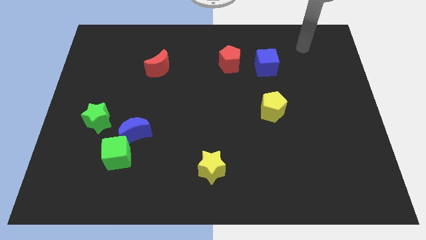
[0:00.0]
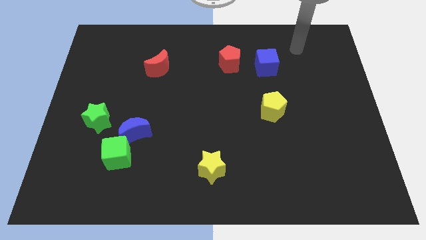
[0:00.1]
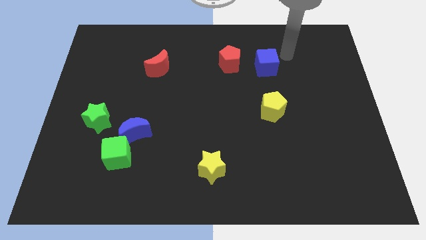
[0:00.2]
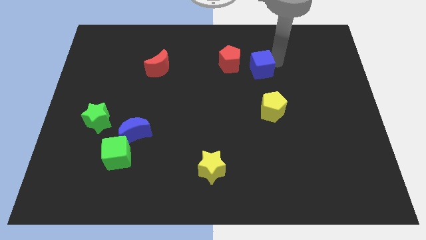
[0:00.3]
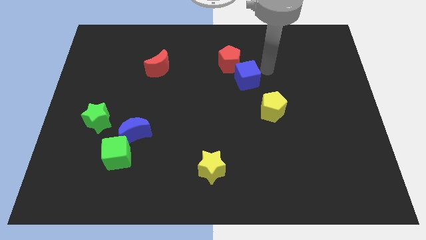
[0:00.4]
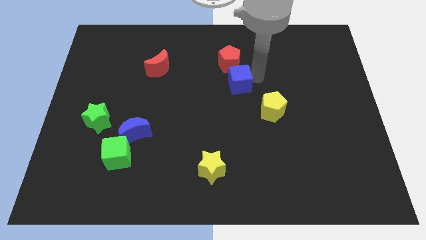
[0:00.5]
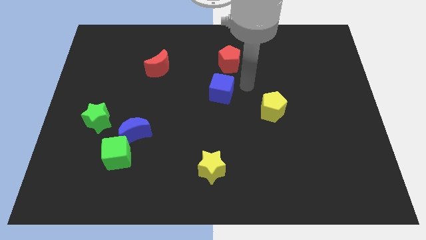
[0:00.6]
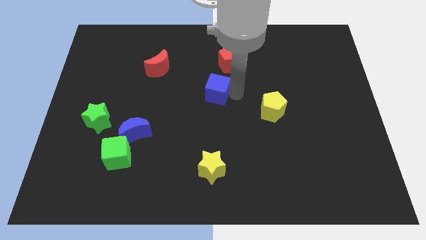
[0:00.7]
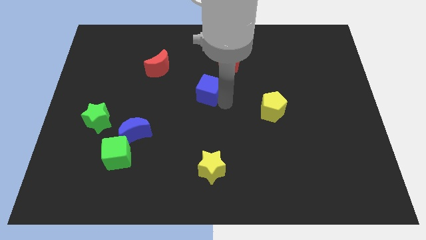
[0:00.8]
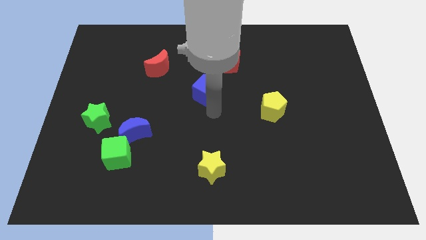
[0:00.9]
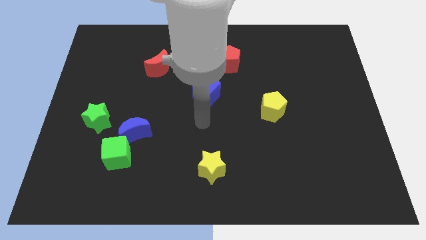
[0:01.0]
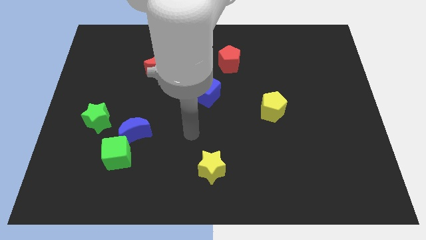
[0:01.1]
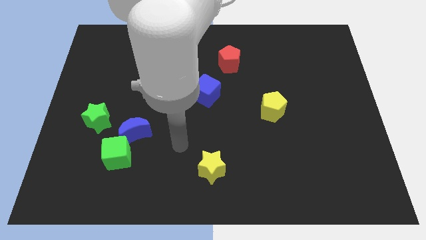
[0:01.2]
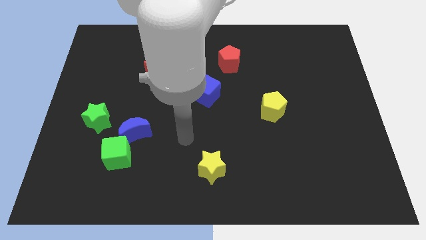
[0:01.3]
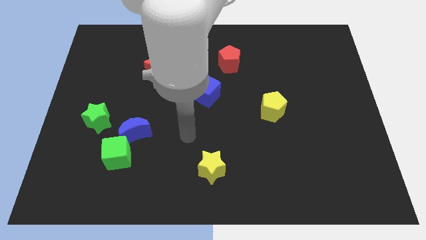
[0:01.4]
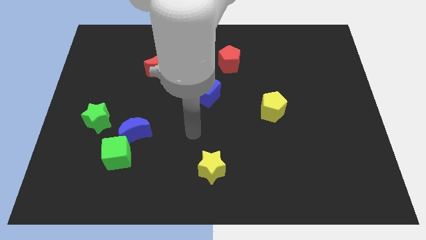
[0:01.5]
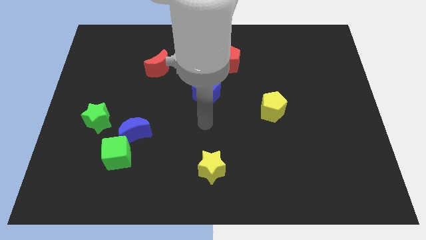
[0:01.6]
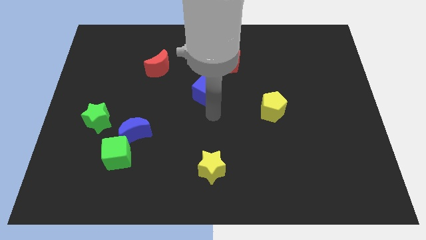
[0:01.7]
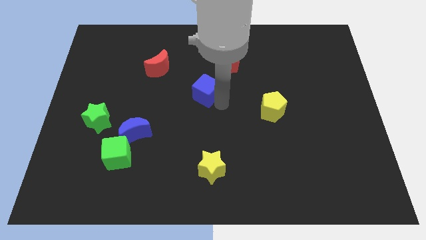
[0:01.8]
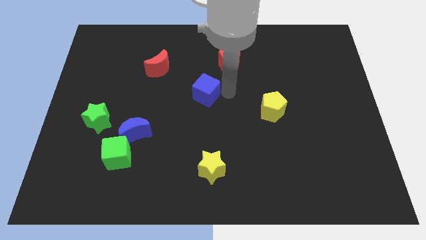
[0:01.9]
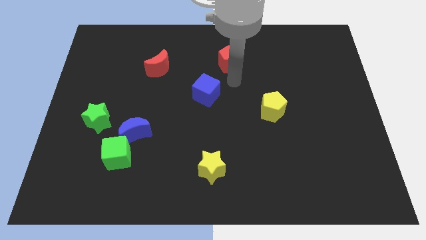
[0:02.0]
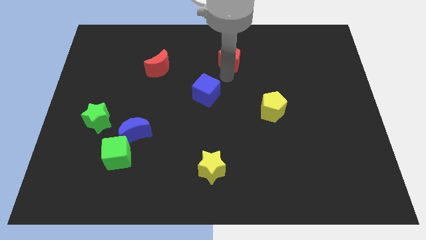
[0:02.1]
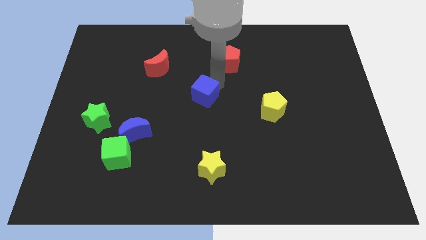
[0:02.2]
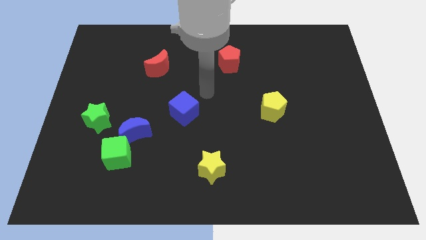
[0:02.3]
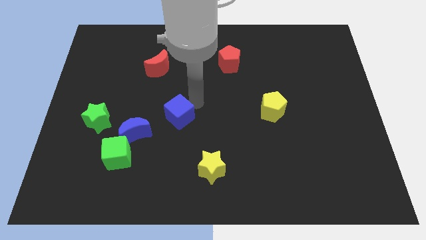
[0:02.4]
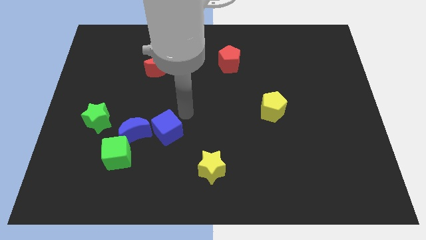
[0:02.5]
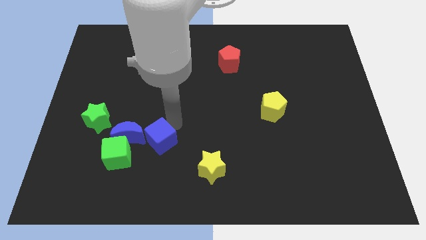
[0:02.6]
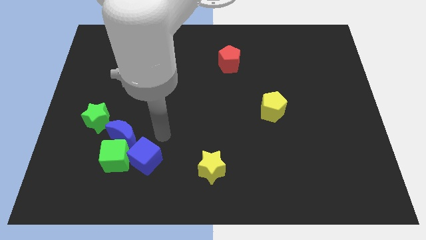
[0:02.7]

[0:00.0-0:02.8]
push the blue cube into the green cube and the blue crescent

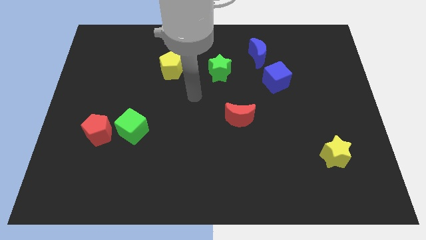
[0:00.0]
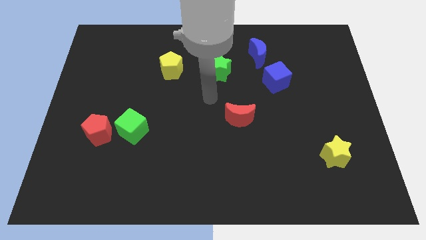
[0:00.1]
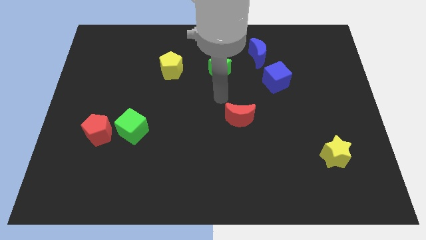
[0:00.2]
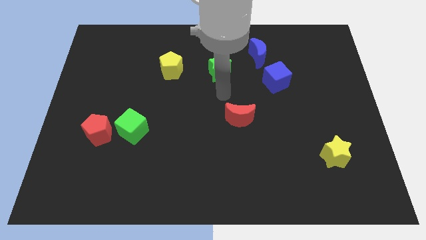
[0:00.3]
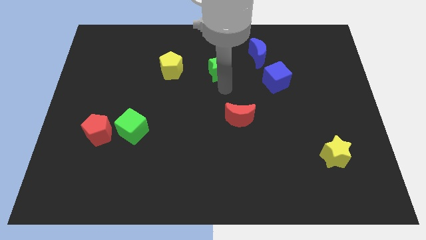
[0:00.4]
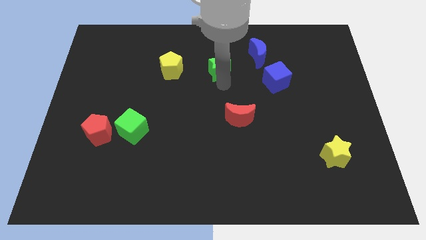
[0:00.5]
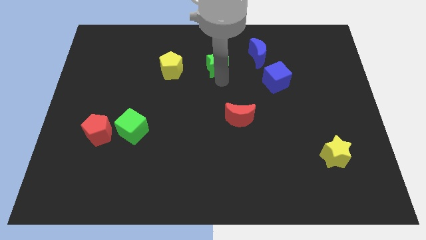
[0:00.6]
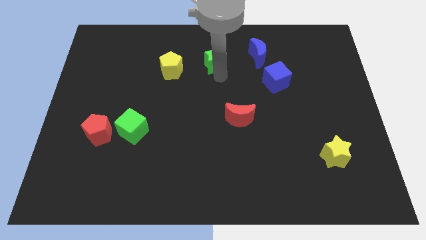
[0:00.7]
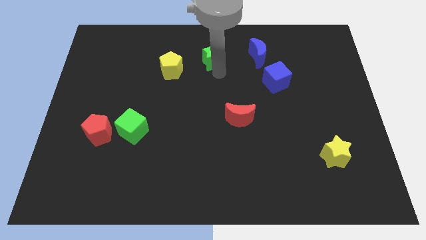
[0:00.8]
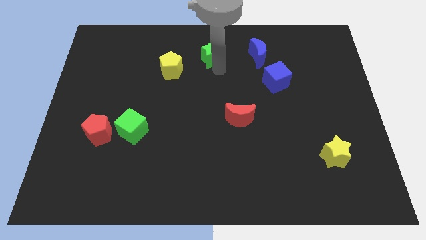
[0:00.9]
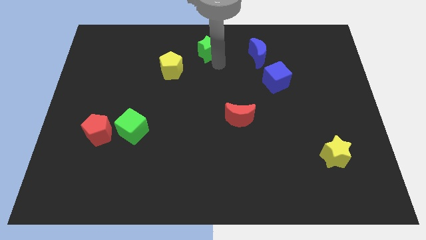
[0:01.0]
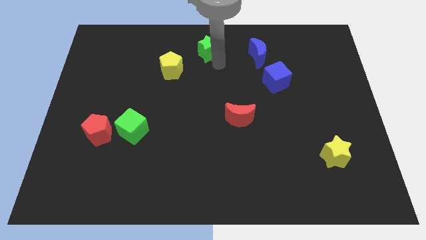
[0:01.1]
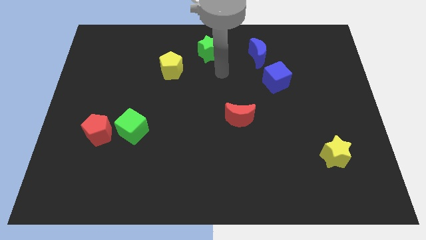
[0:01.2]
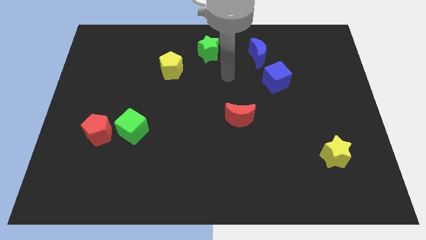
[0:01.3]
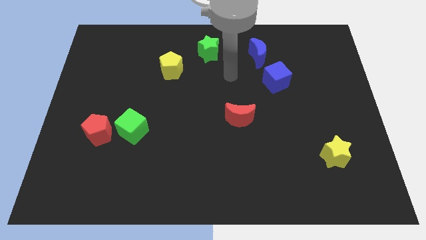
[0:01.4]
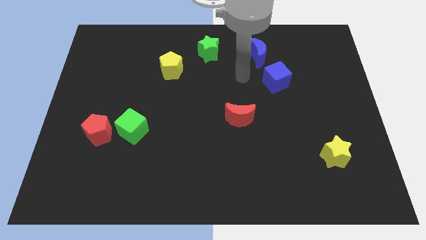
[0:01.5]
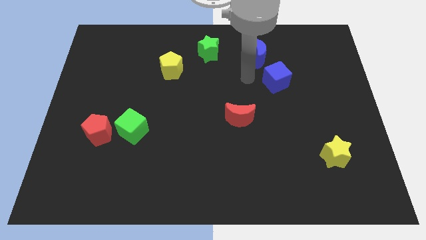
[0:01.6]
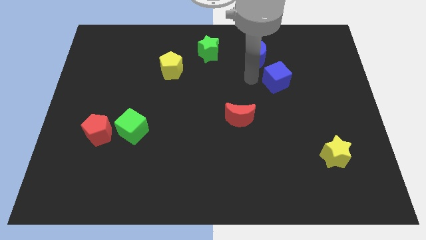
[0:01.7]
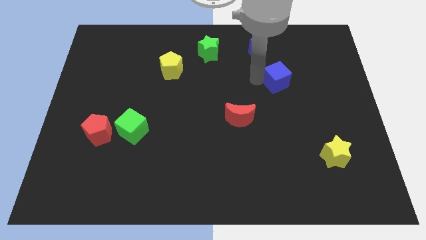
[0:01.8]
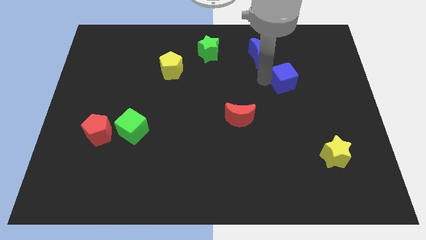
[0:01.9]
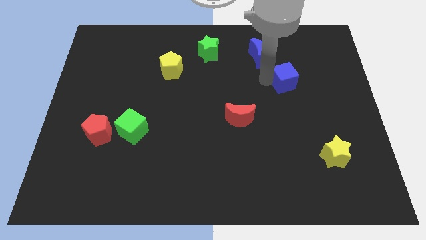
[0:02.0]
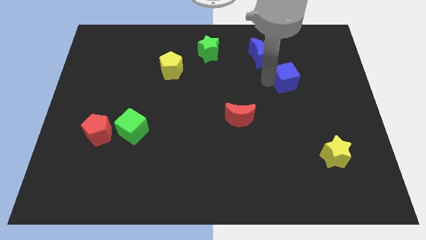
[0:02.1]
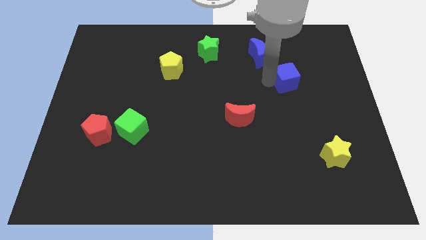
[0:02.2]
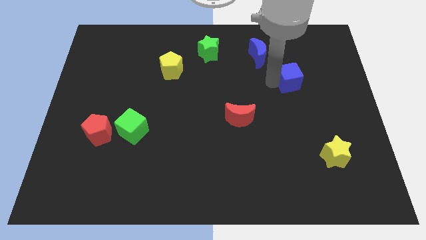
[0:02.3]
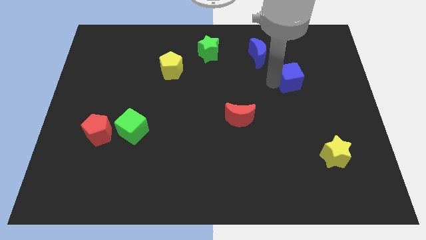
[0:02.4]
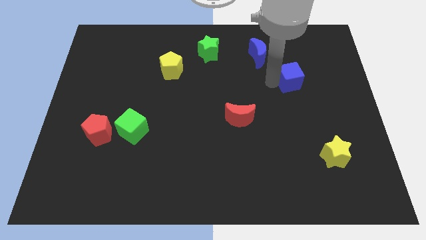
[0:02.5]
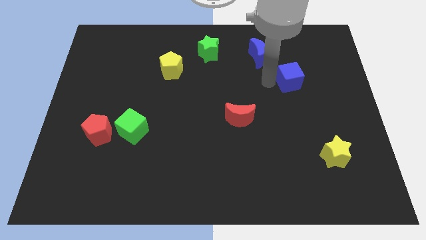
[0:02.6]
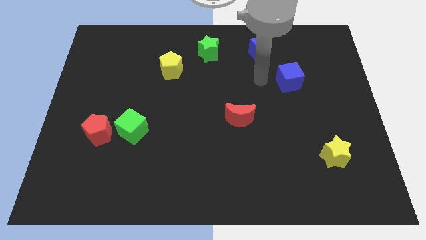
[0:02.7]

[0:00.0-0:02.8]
slightly move the blue cube to the right side of the board

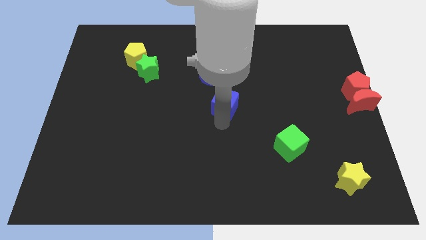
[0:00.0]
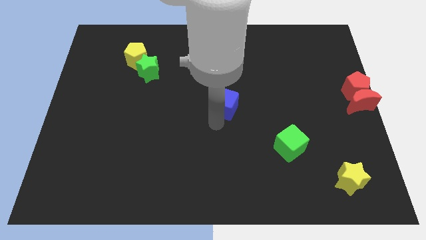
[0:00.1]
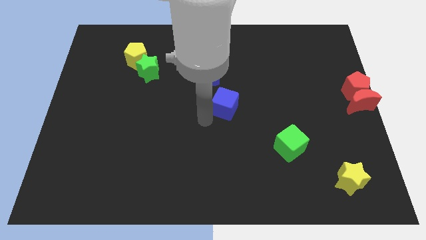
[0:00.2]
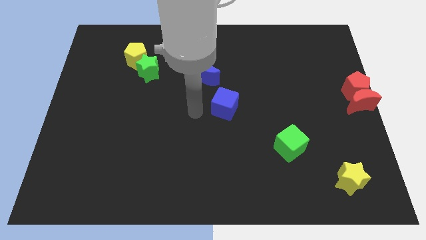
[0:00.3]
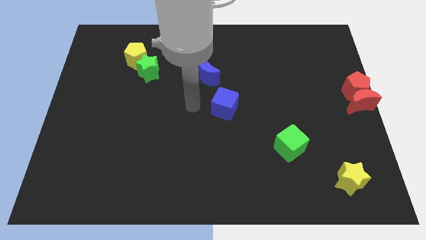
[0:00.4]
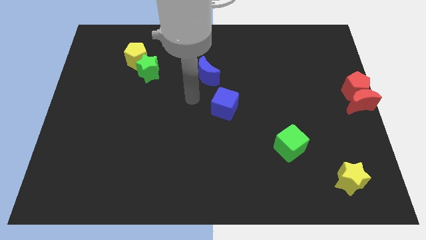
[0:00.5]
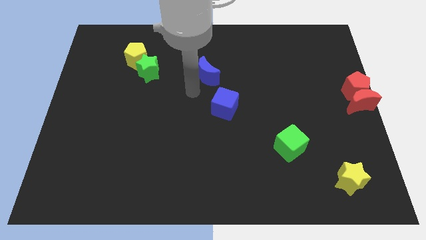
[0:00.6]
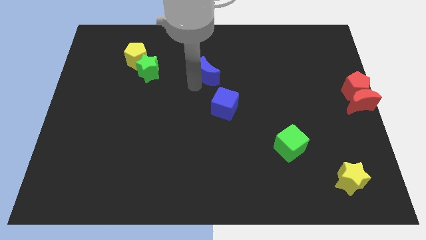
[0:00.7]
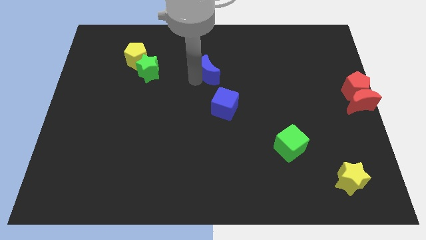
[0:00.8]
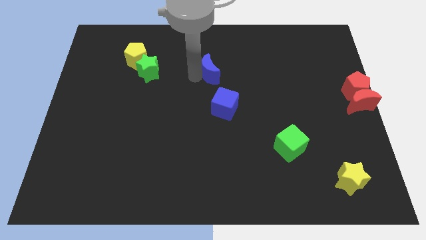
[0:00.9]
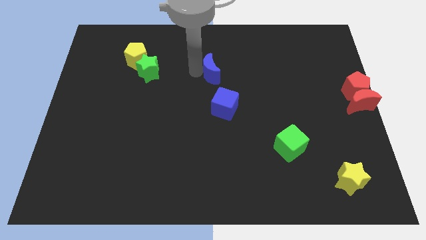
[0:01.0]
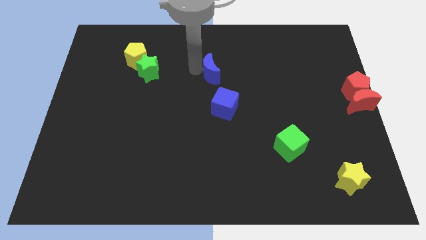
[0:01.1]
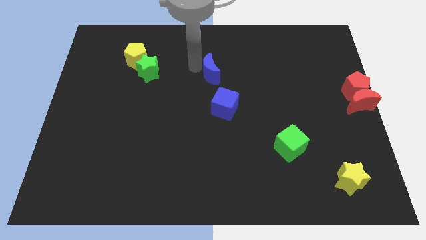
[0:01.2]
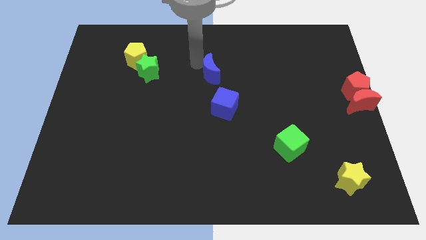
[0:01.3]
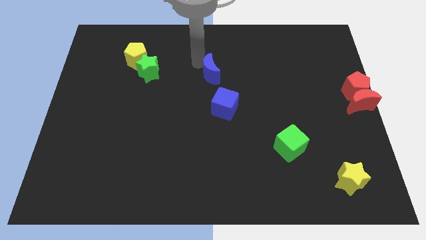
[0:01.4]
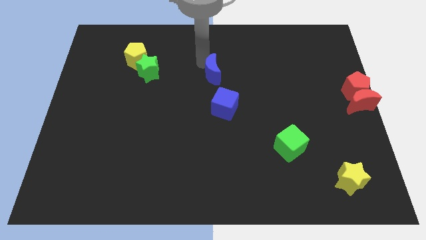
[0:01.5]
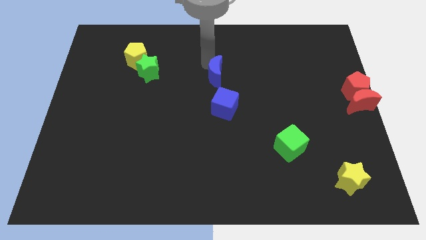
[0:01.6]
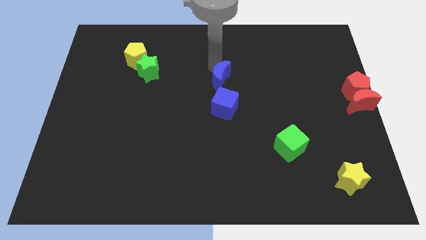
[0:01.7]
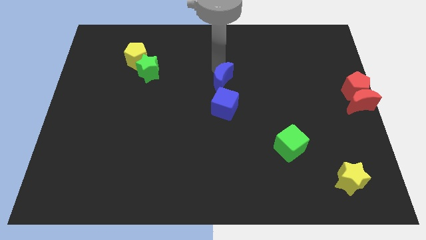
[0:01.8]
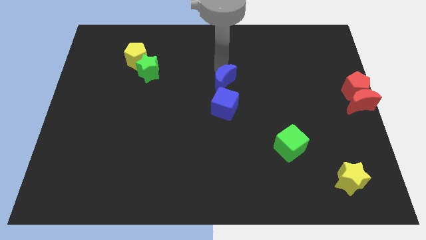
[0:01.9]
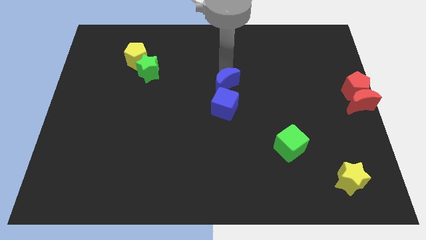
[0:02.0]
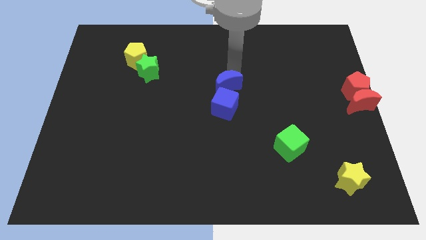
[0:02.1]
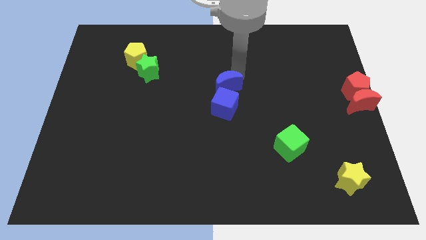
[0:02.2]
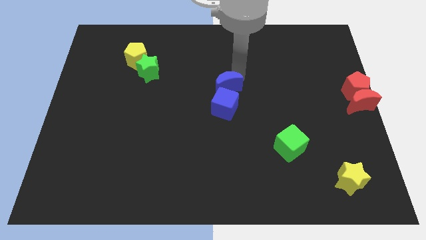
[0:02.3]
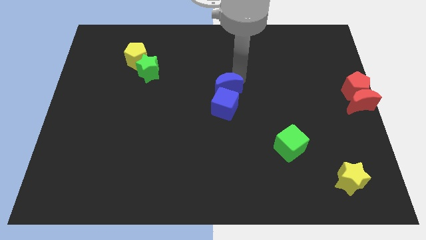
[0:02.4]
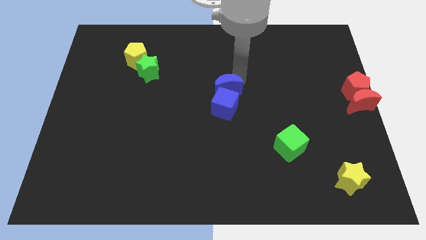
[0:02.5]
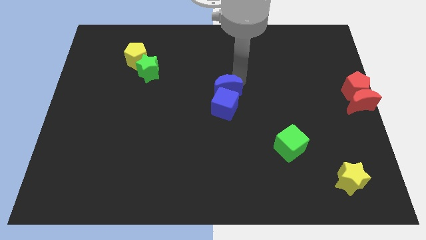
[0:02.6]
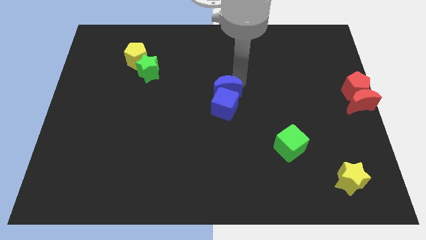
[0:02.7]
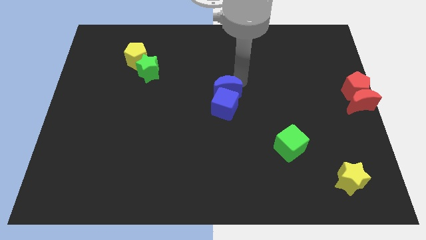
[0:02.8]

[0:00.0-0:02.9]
place the blue moon at the center of the board

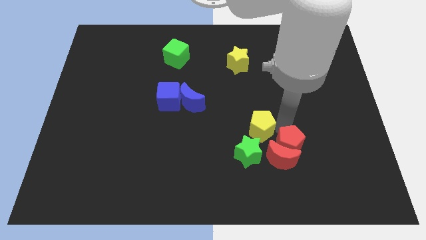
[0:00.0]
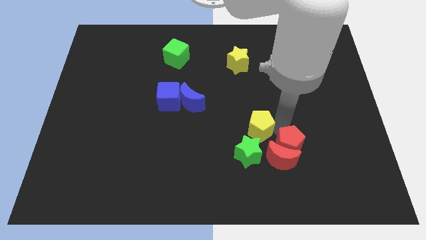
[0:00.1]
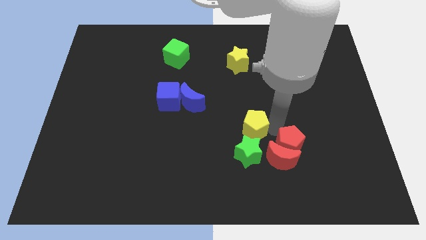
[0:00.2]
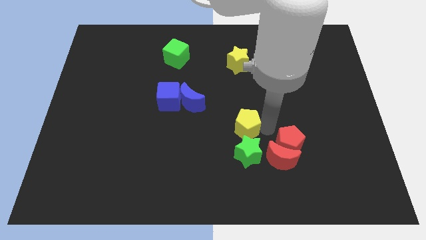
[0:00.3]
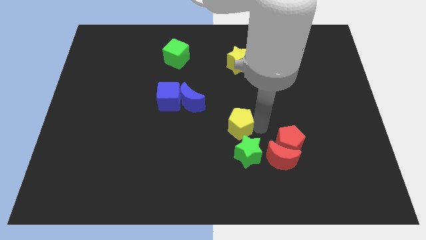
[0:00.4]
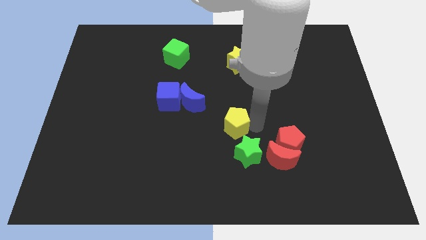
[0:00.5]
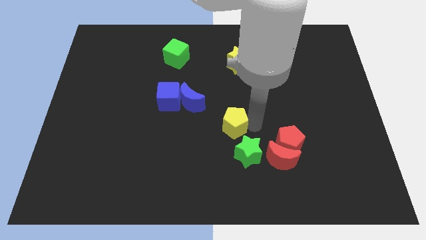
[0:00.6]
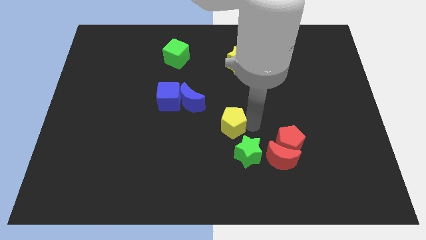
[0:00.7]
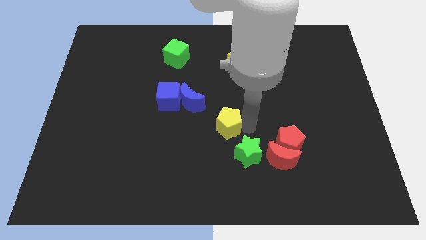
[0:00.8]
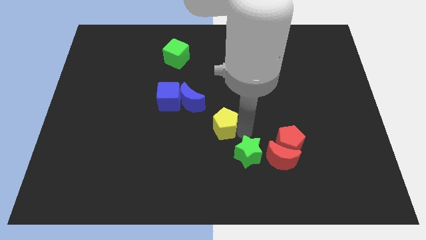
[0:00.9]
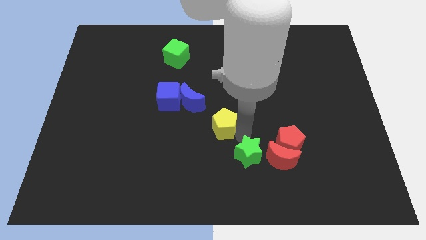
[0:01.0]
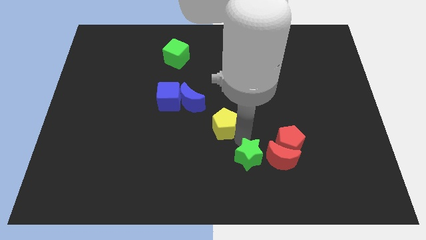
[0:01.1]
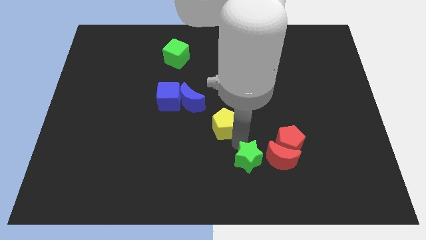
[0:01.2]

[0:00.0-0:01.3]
point your arm above green star
